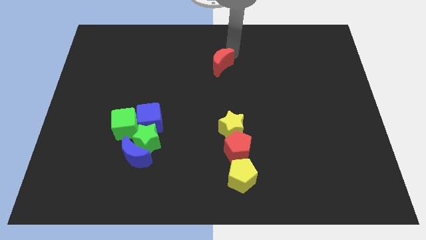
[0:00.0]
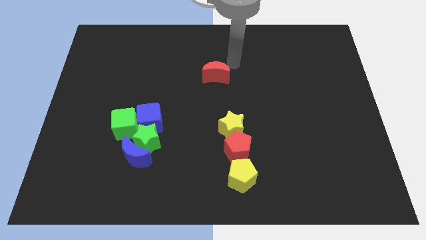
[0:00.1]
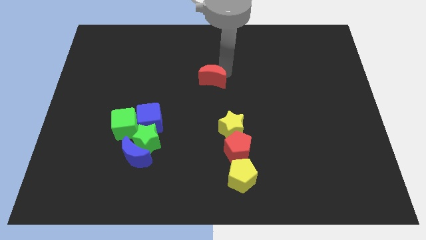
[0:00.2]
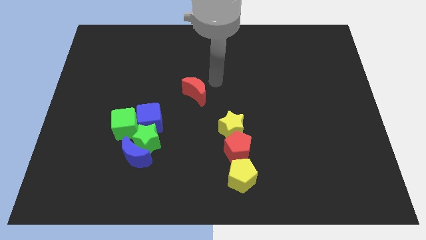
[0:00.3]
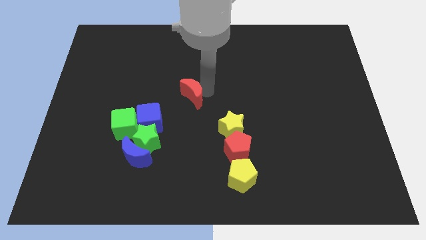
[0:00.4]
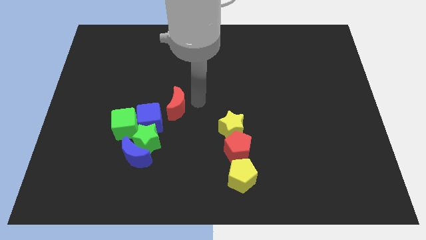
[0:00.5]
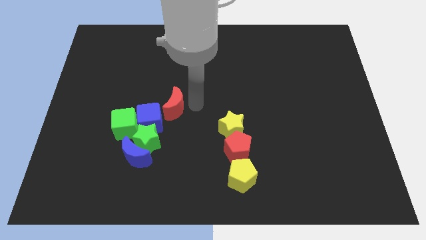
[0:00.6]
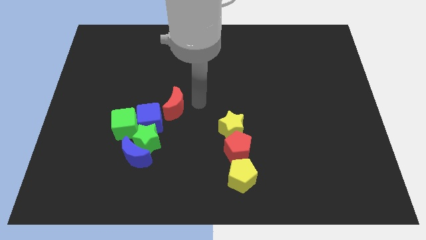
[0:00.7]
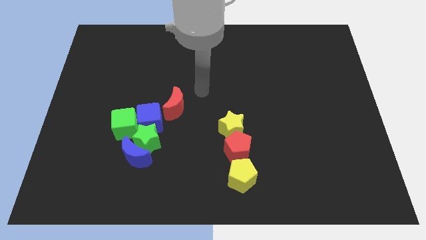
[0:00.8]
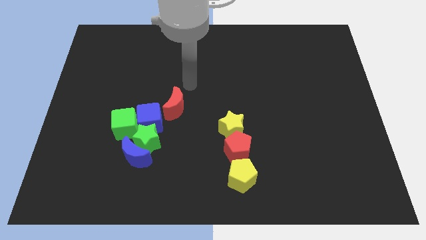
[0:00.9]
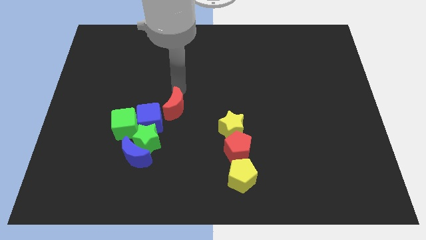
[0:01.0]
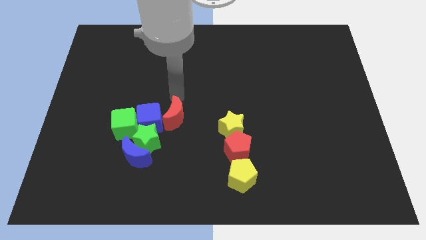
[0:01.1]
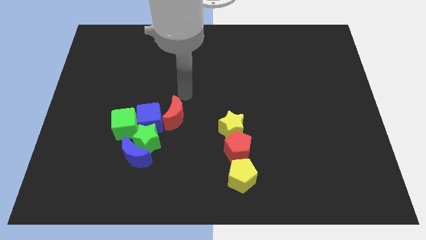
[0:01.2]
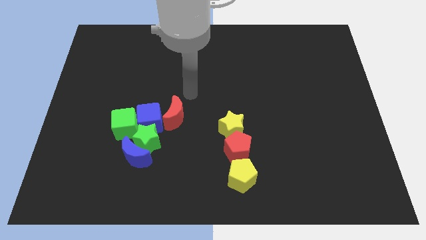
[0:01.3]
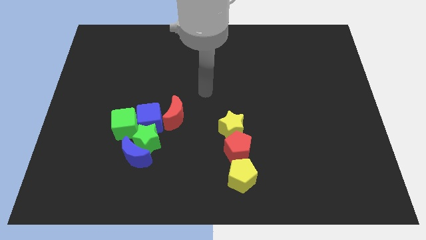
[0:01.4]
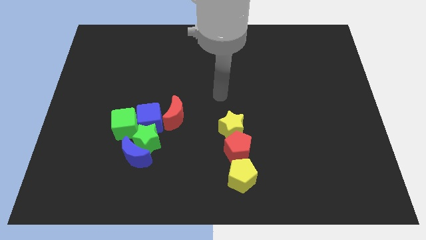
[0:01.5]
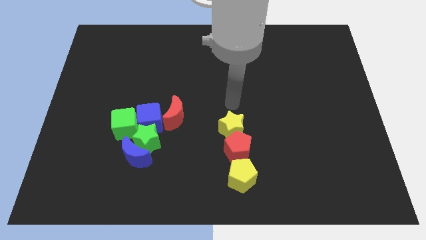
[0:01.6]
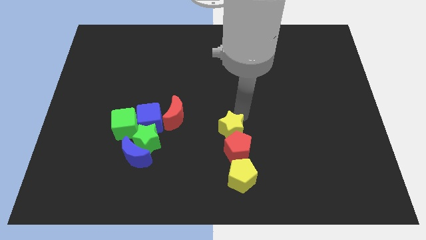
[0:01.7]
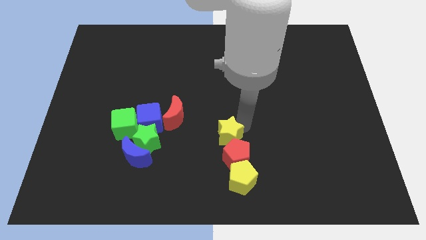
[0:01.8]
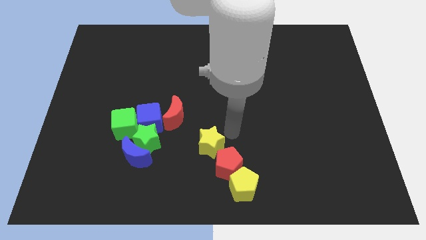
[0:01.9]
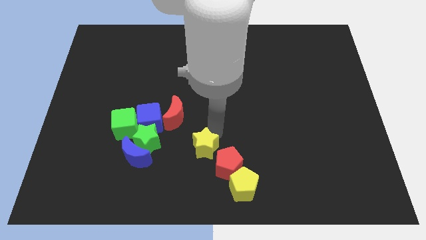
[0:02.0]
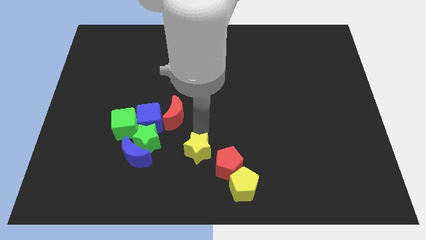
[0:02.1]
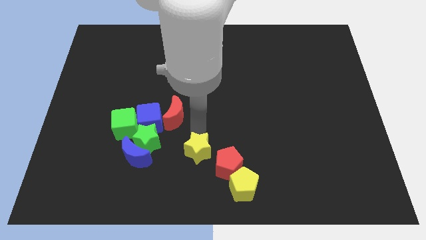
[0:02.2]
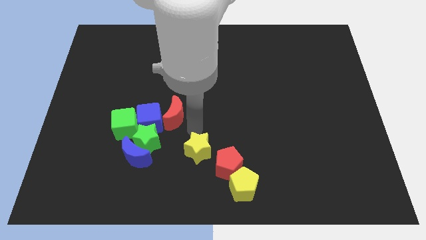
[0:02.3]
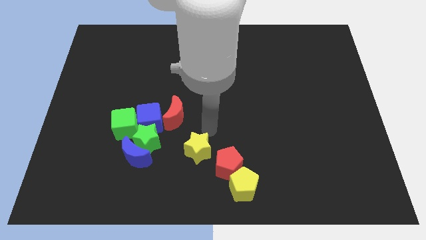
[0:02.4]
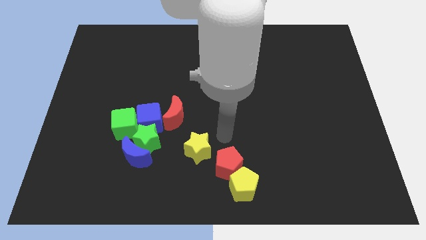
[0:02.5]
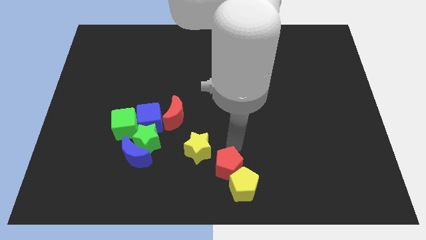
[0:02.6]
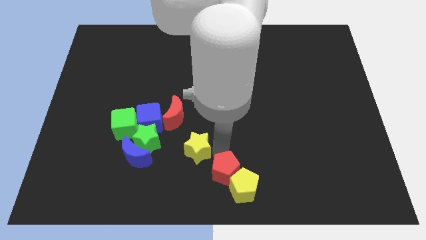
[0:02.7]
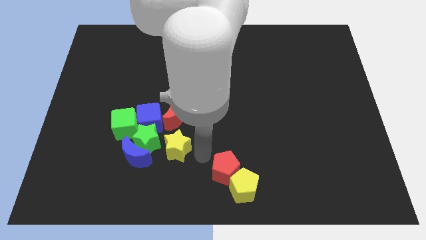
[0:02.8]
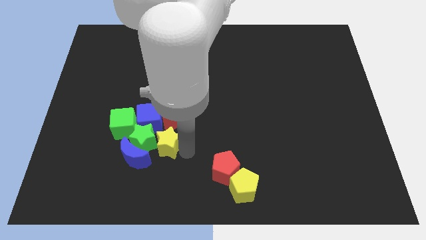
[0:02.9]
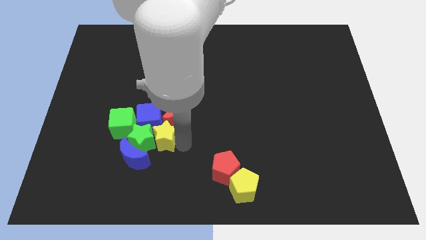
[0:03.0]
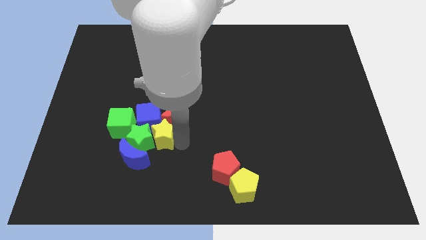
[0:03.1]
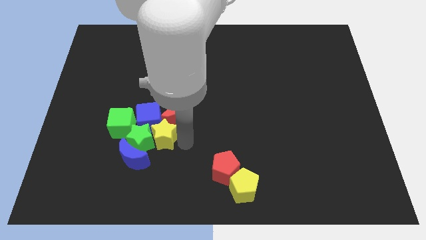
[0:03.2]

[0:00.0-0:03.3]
push the yellow star right to the green star

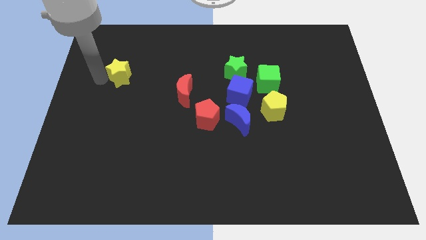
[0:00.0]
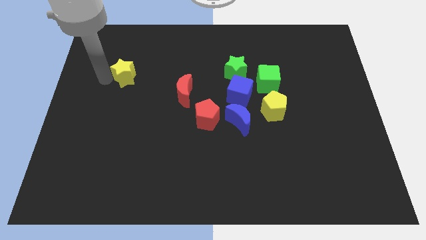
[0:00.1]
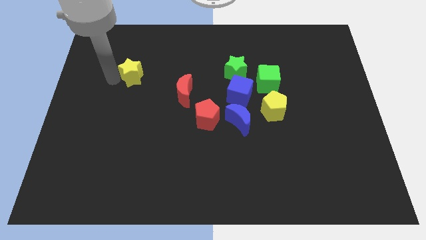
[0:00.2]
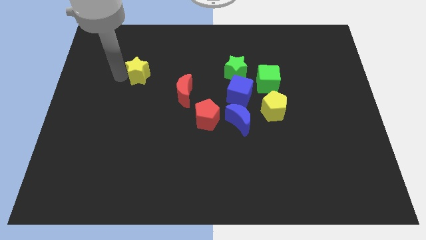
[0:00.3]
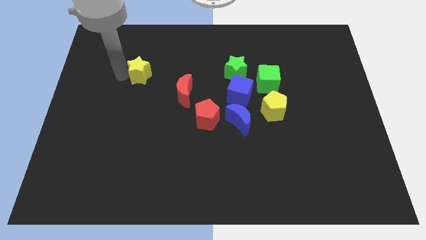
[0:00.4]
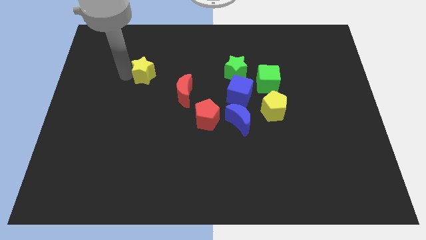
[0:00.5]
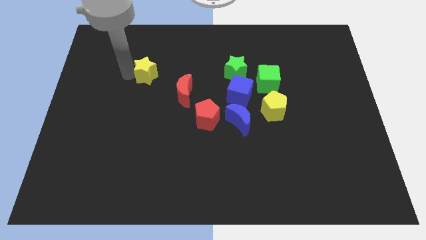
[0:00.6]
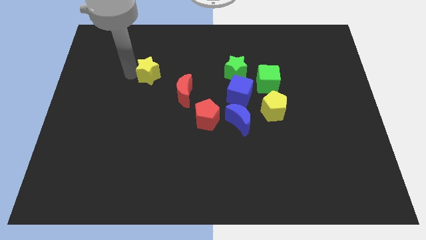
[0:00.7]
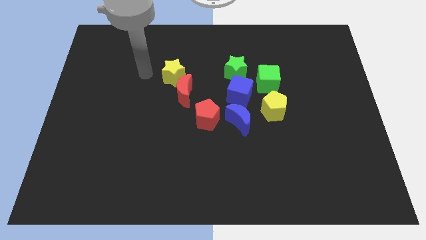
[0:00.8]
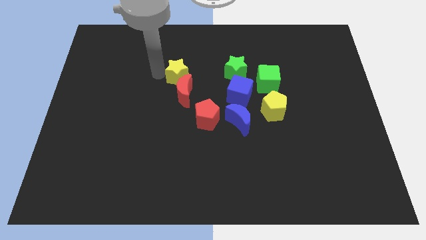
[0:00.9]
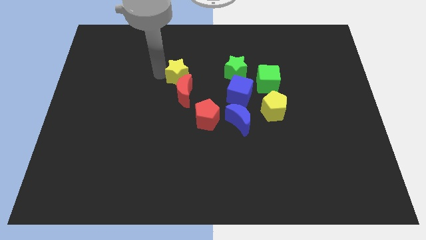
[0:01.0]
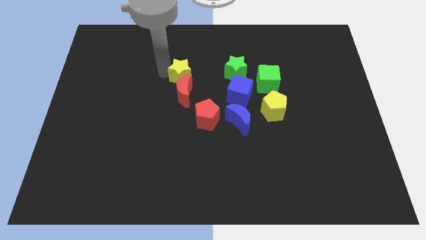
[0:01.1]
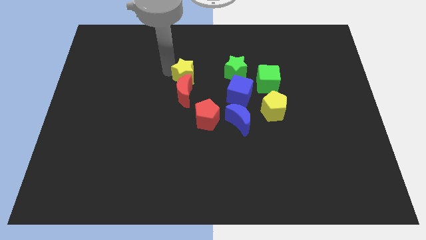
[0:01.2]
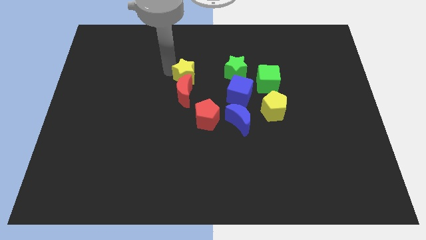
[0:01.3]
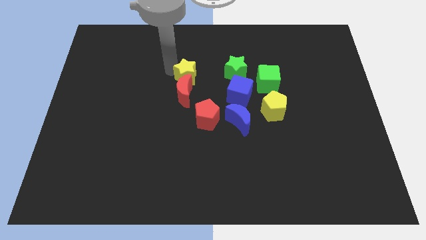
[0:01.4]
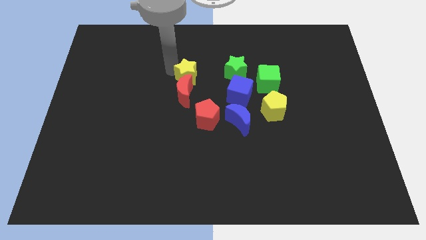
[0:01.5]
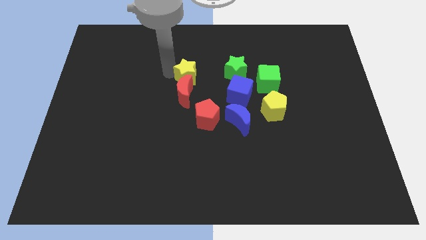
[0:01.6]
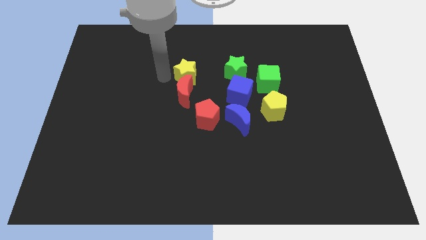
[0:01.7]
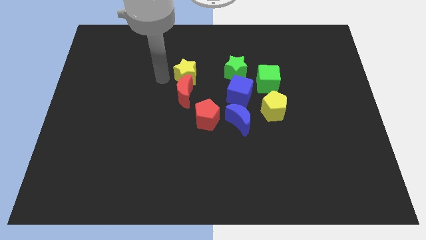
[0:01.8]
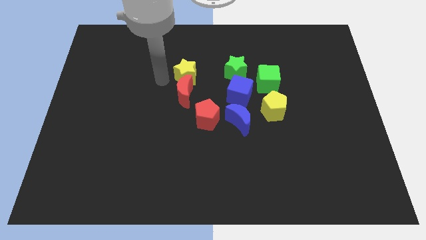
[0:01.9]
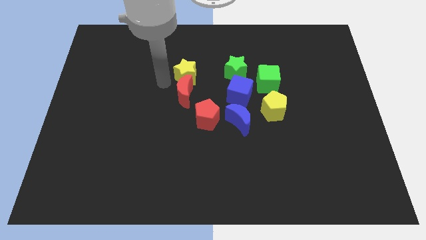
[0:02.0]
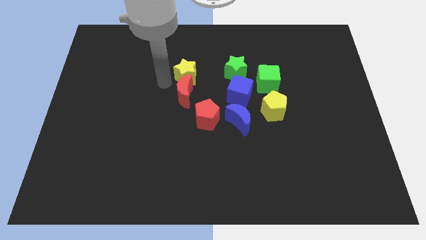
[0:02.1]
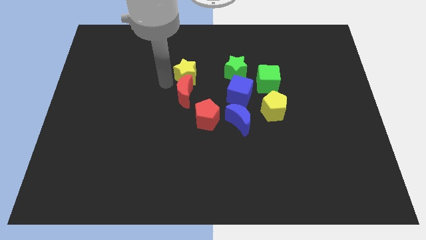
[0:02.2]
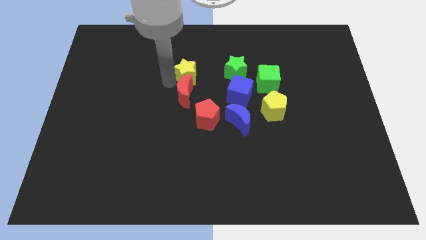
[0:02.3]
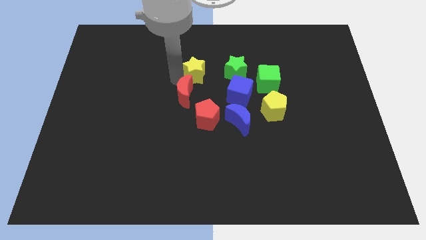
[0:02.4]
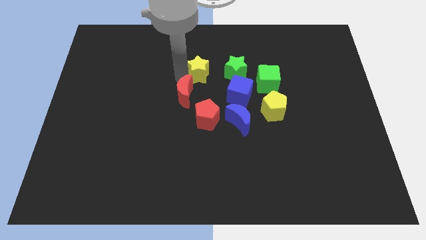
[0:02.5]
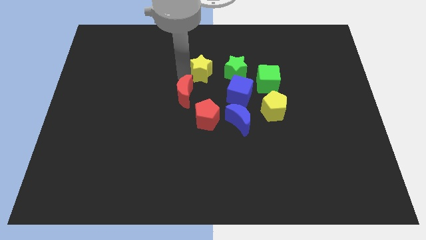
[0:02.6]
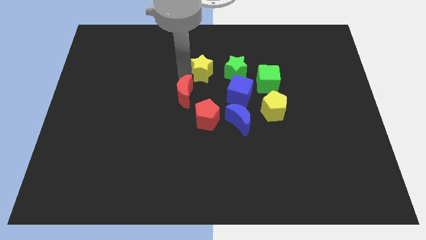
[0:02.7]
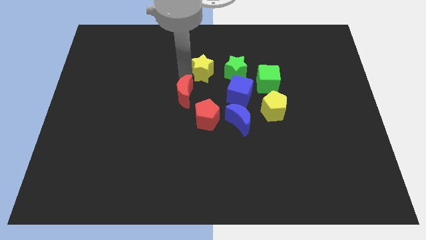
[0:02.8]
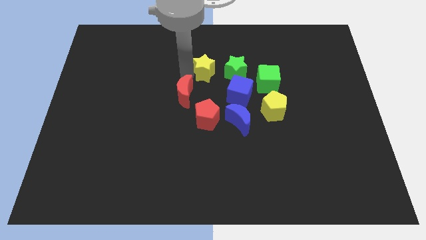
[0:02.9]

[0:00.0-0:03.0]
slide the yellow star towards the left side of the green star

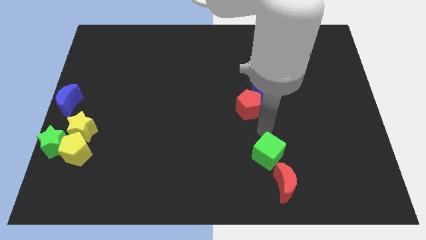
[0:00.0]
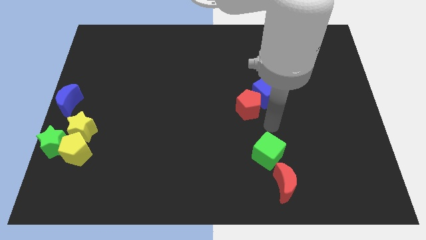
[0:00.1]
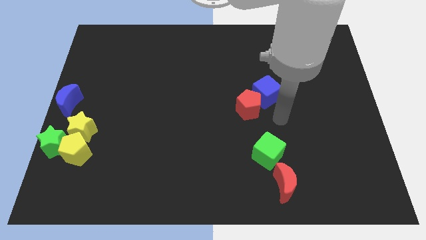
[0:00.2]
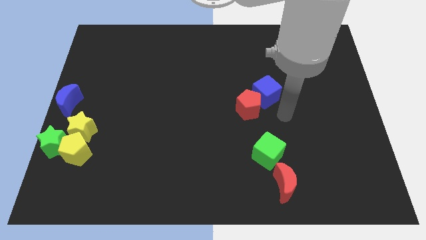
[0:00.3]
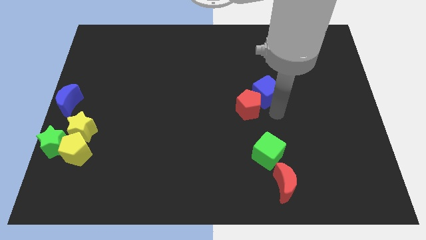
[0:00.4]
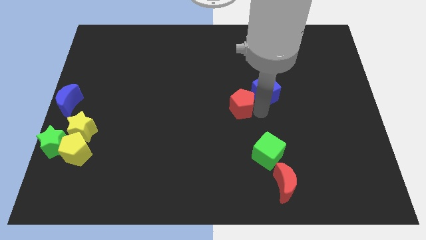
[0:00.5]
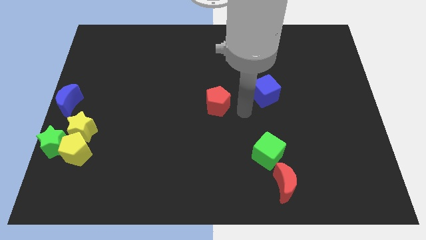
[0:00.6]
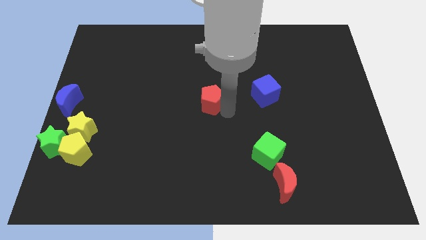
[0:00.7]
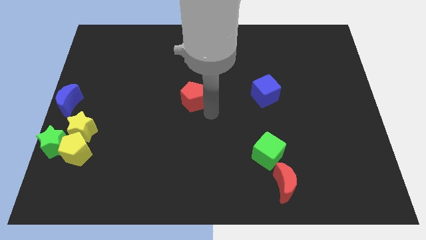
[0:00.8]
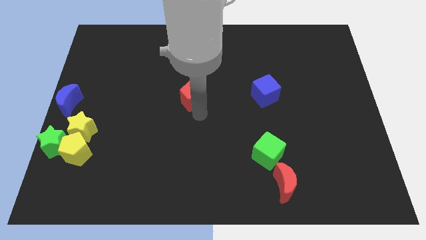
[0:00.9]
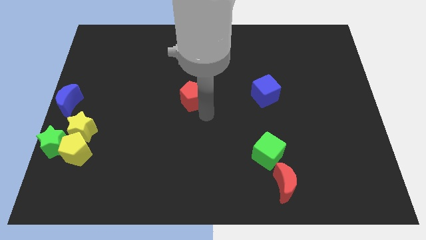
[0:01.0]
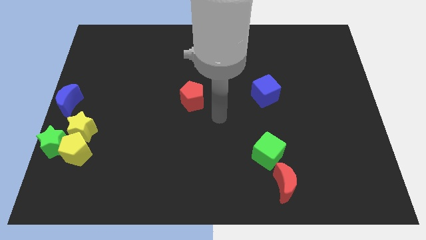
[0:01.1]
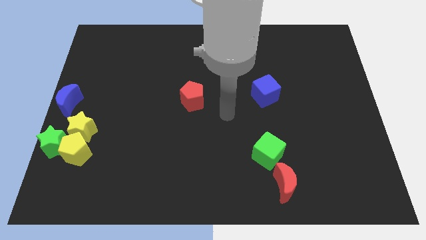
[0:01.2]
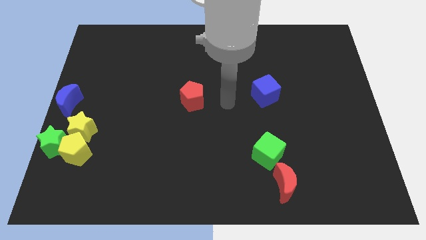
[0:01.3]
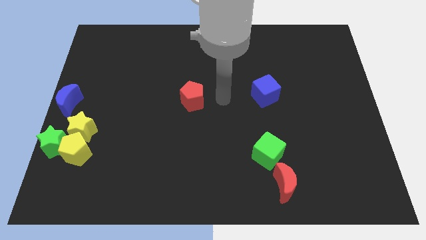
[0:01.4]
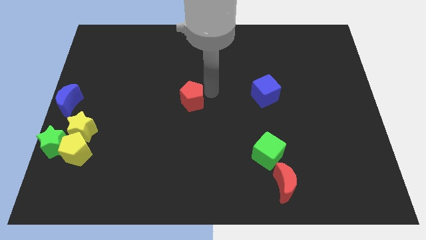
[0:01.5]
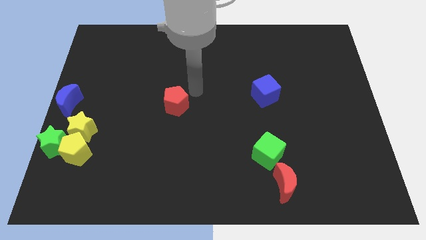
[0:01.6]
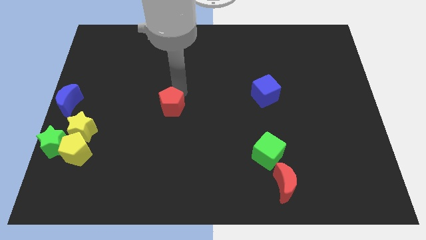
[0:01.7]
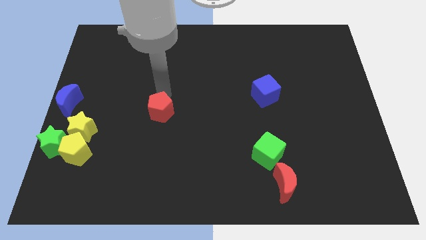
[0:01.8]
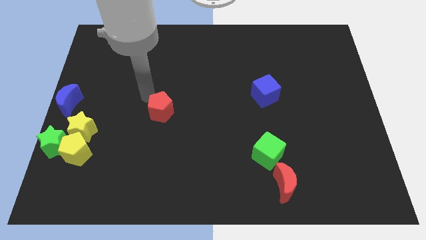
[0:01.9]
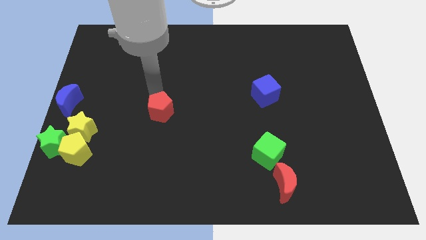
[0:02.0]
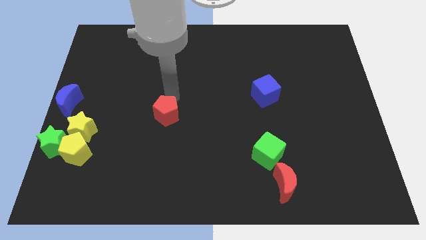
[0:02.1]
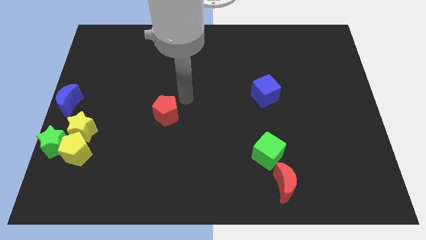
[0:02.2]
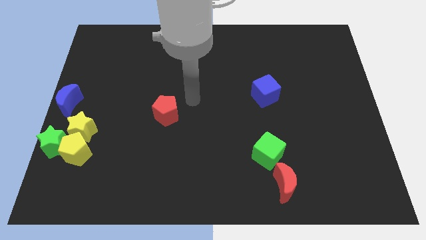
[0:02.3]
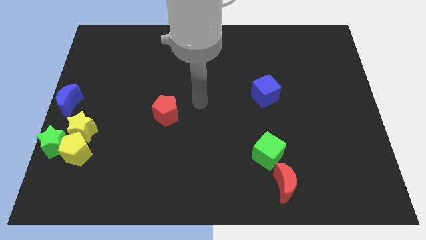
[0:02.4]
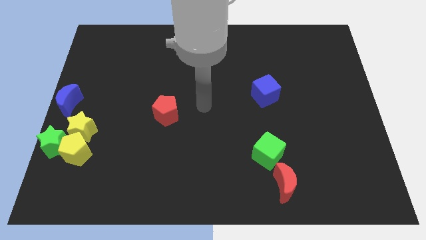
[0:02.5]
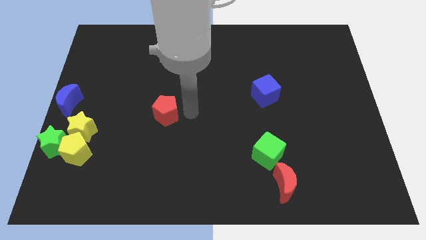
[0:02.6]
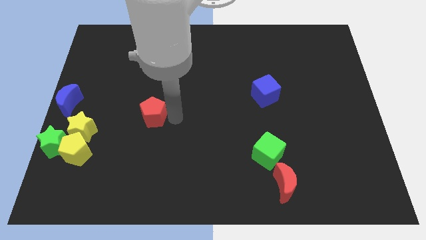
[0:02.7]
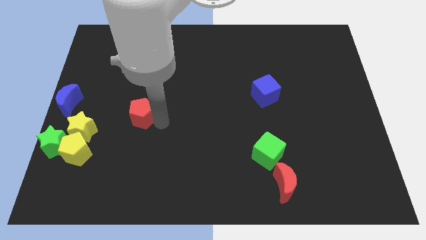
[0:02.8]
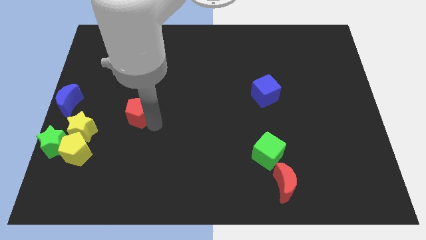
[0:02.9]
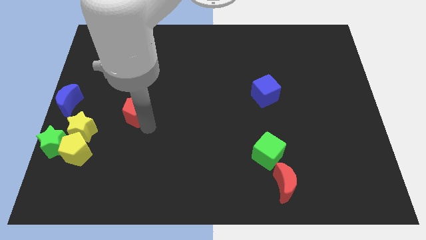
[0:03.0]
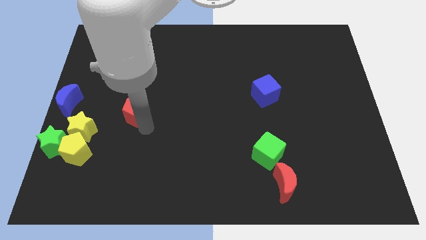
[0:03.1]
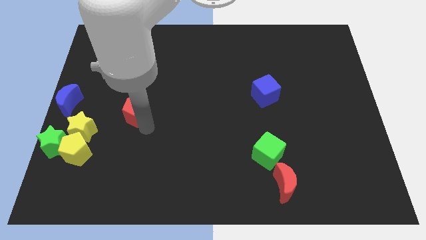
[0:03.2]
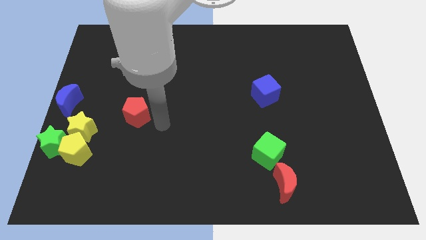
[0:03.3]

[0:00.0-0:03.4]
push red pentagon towards center left
